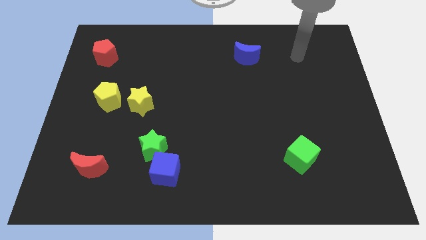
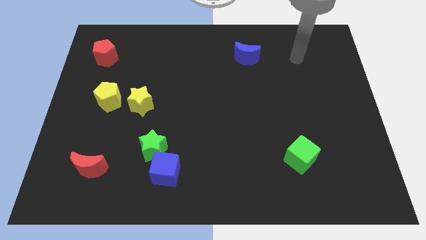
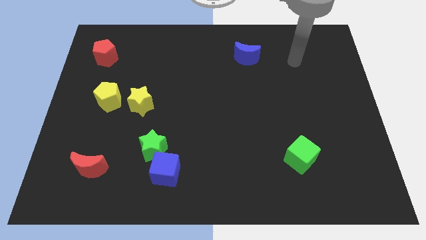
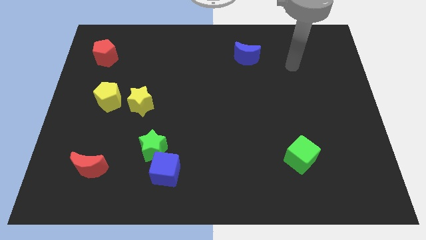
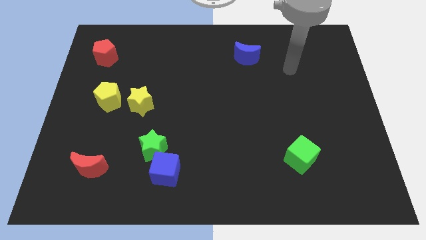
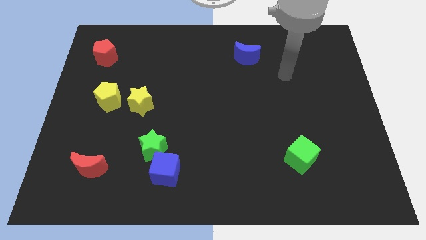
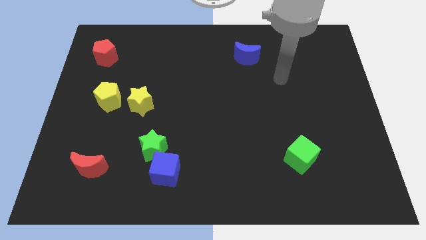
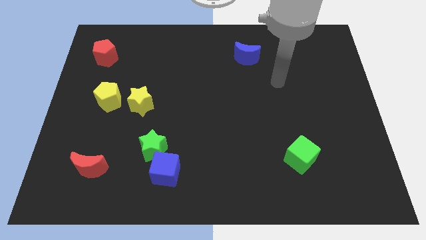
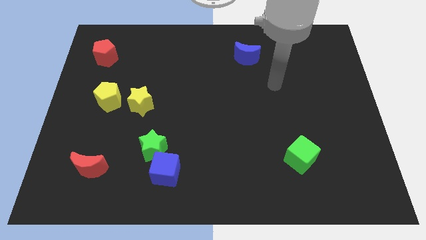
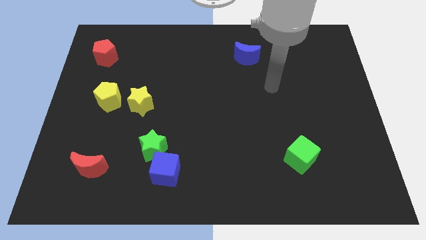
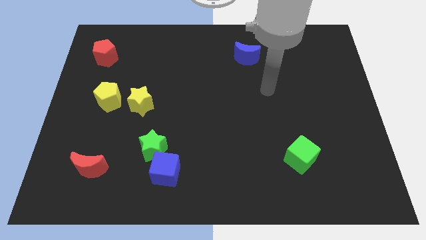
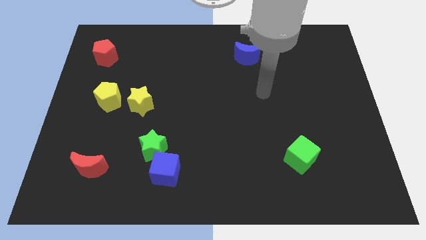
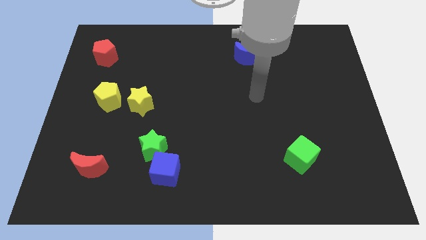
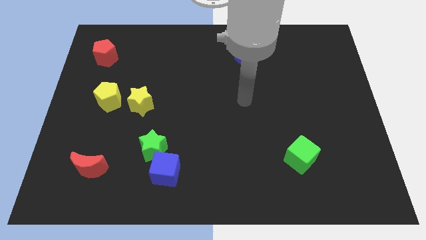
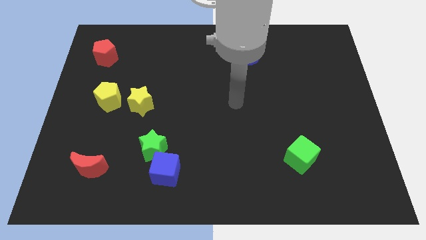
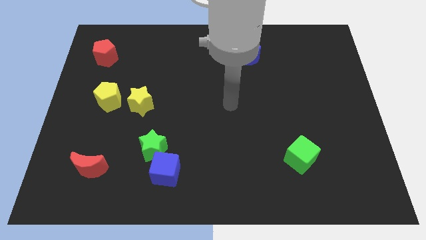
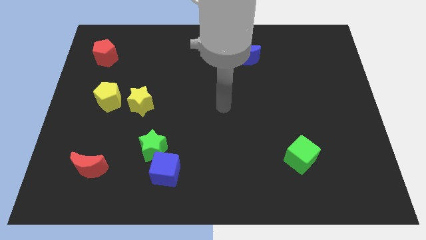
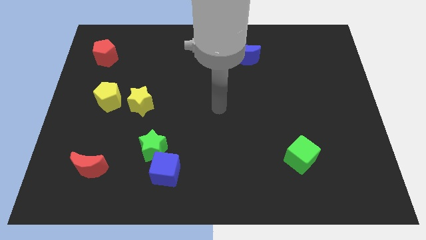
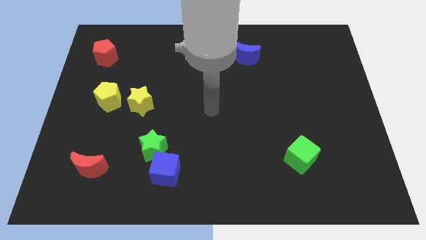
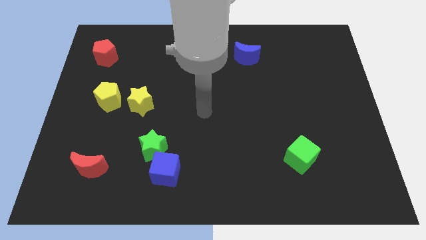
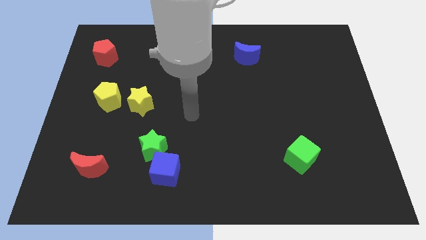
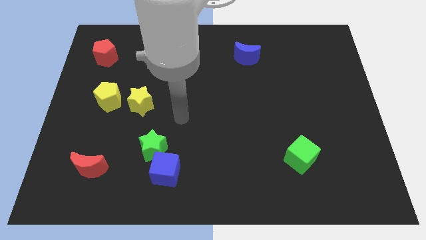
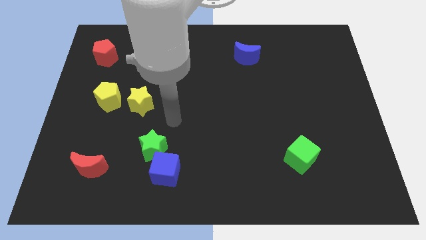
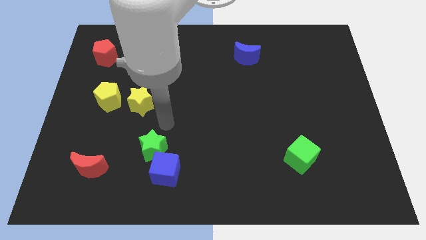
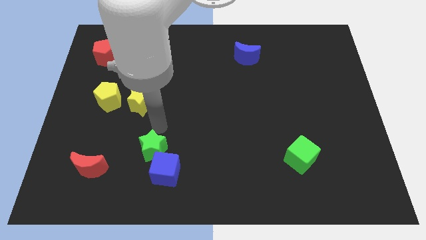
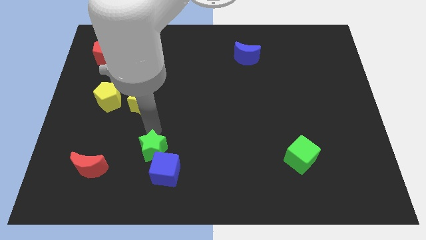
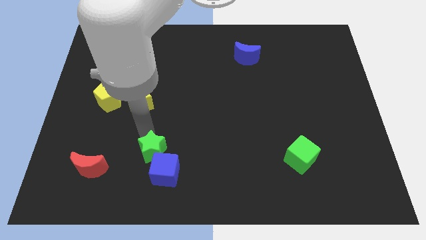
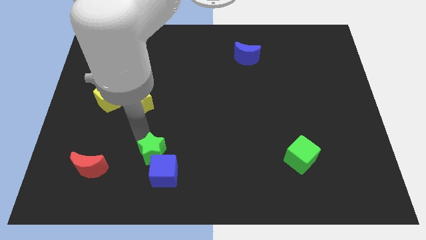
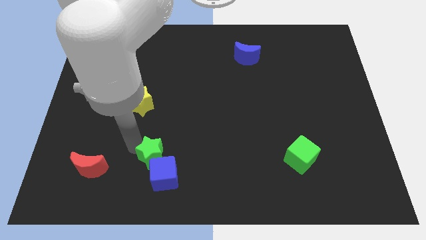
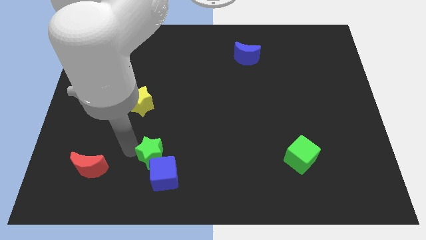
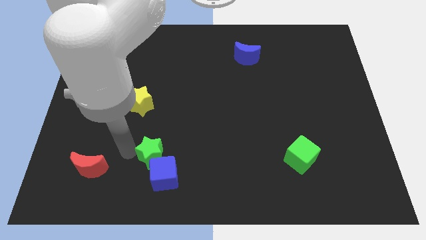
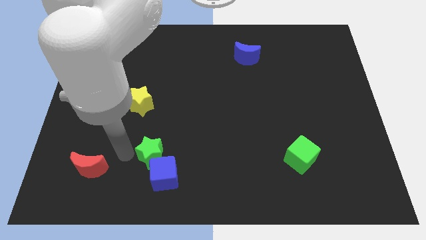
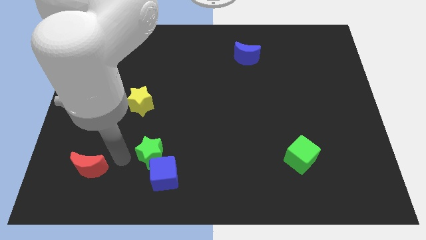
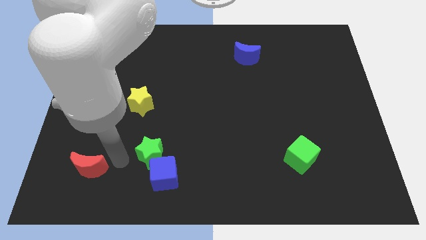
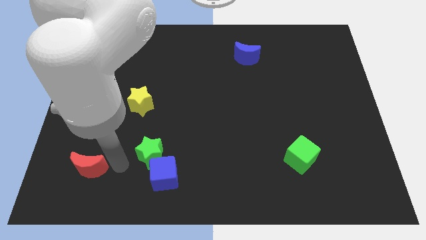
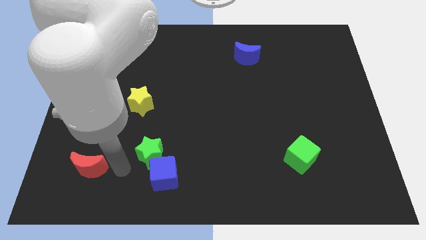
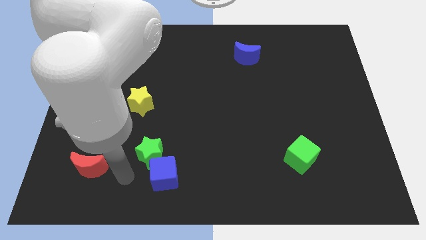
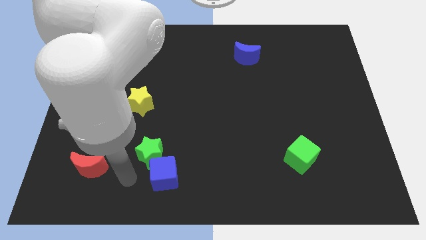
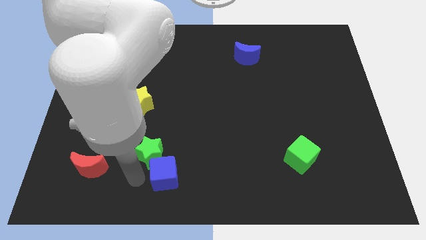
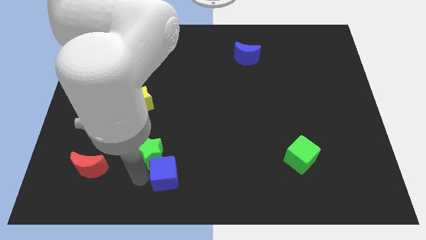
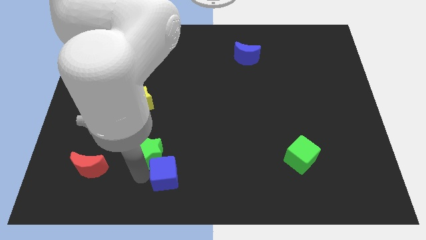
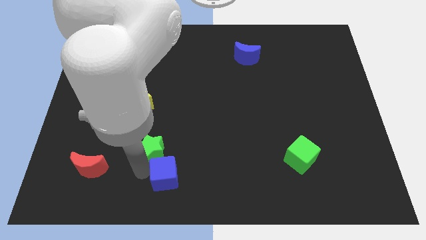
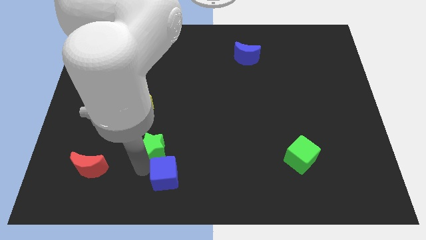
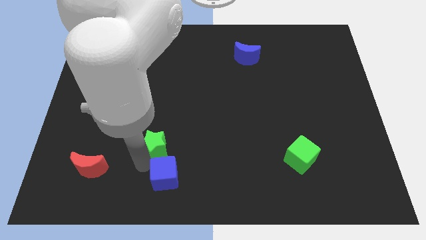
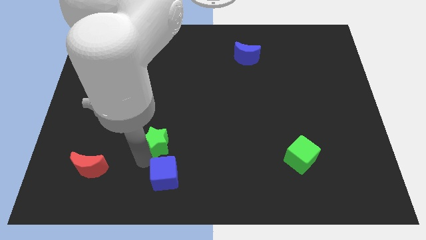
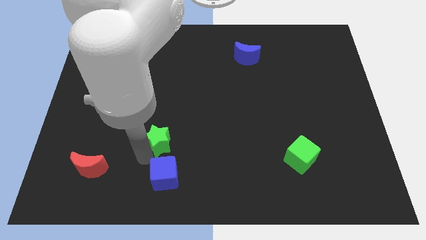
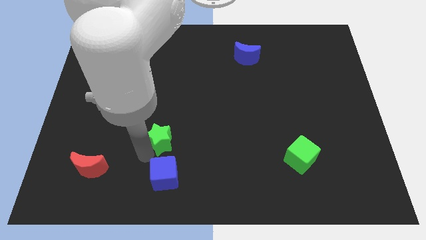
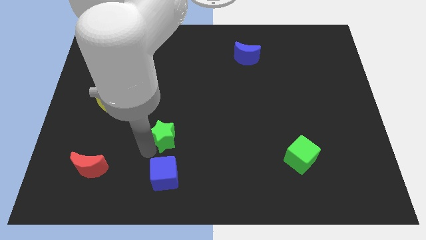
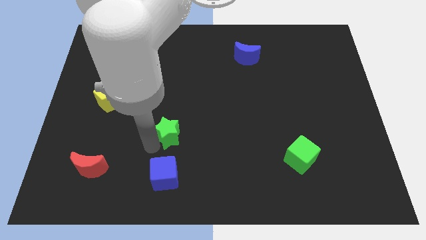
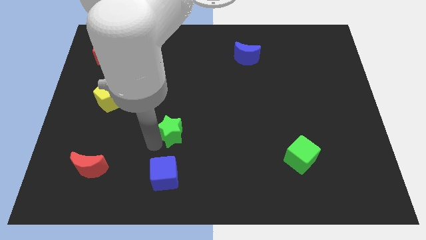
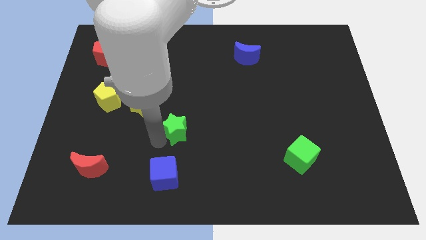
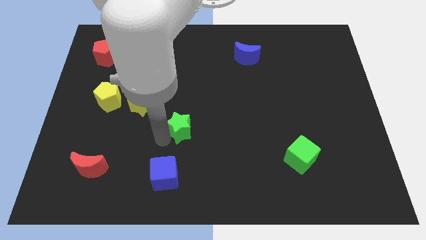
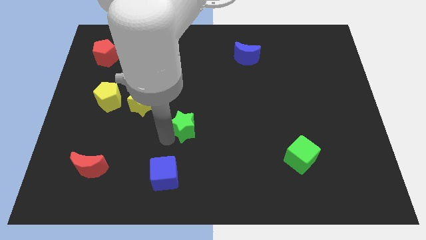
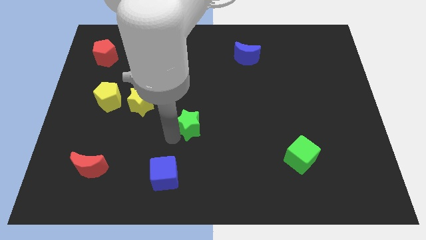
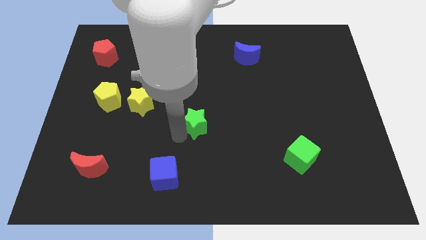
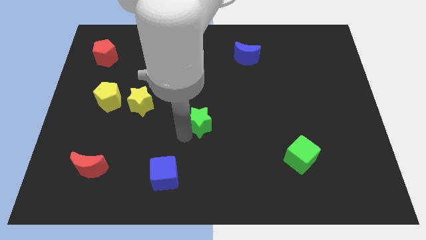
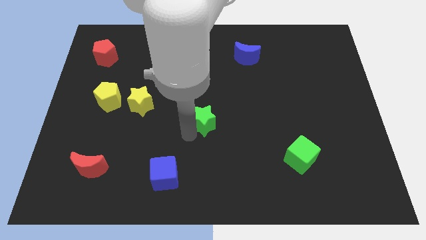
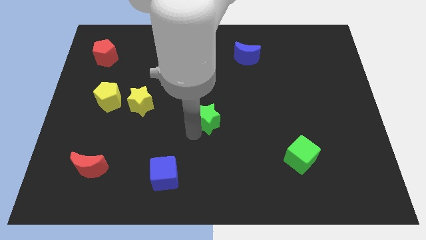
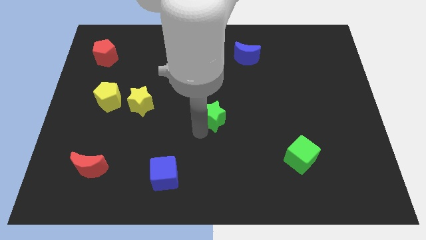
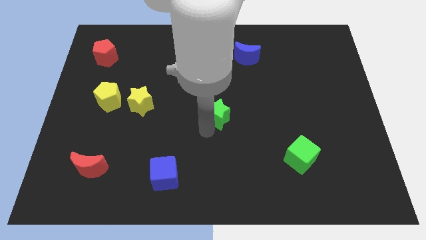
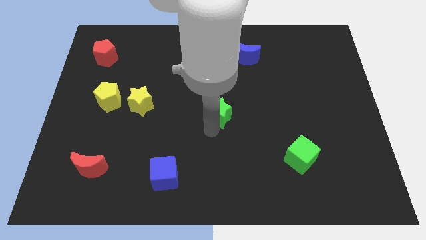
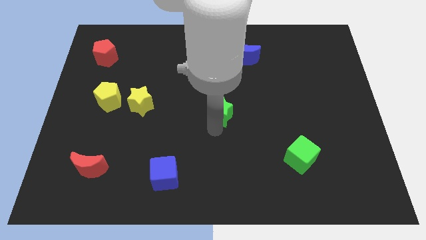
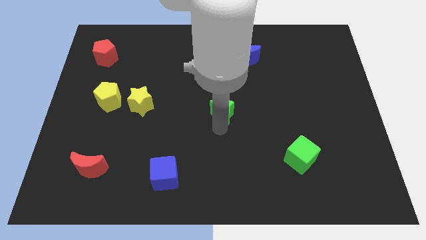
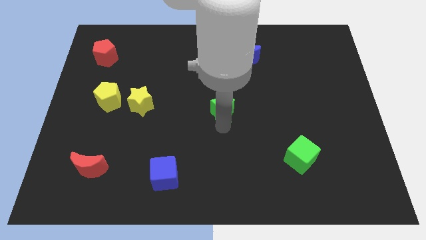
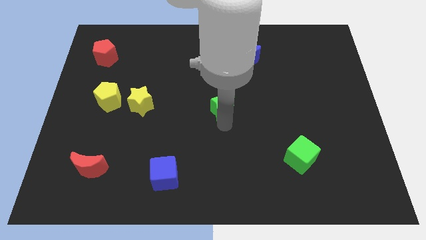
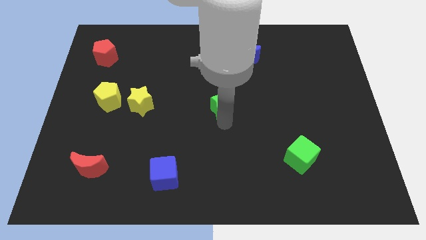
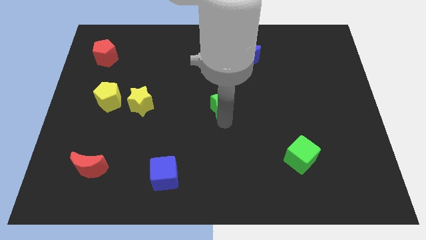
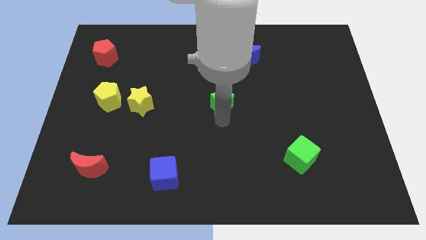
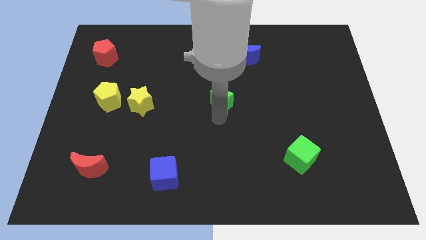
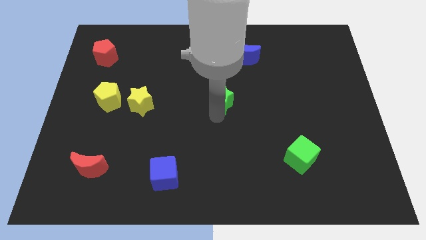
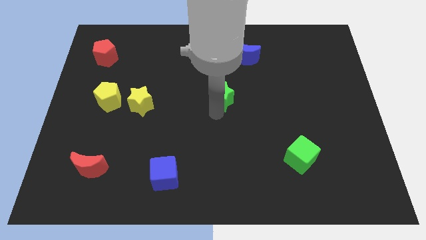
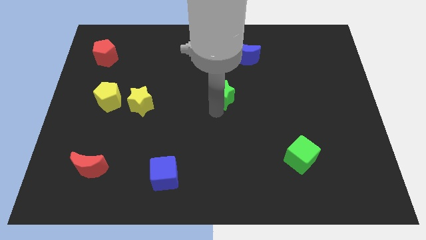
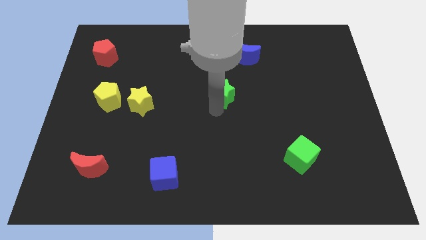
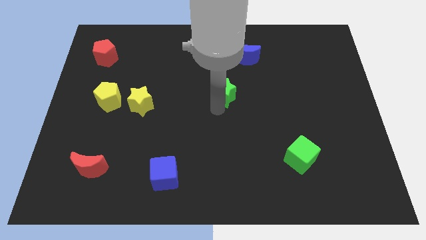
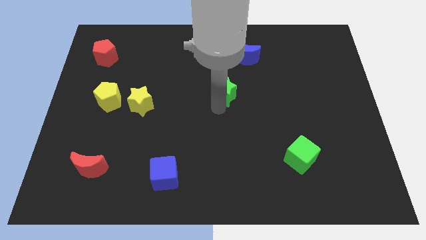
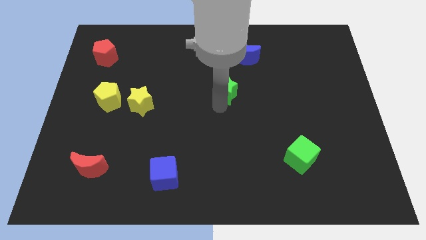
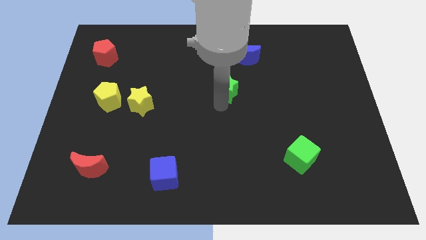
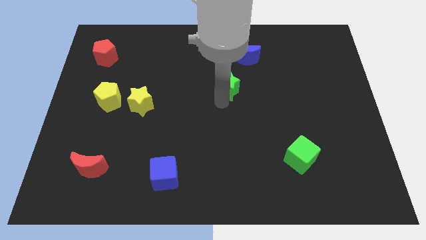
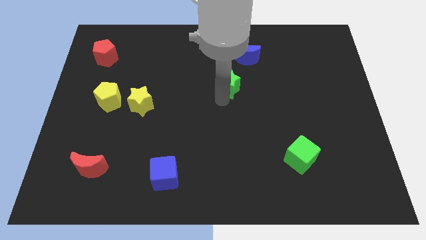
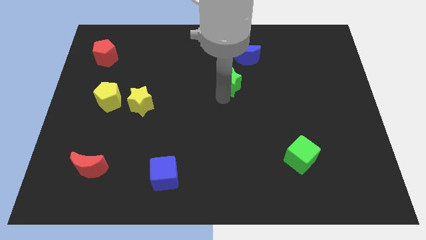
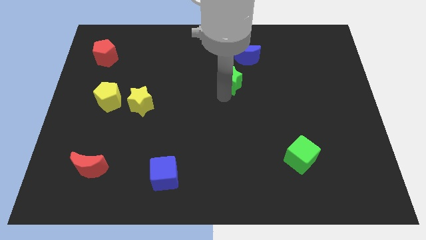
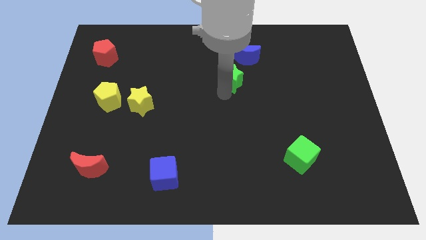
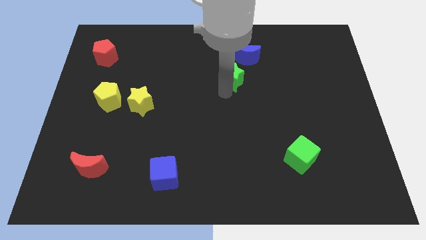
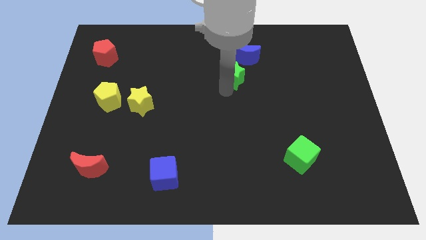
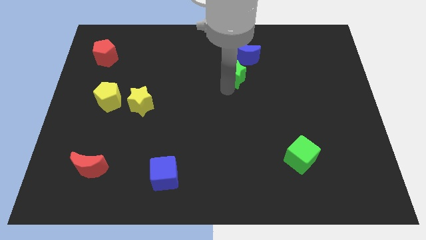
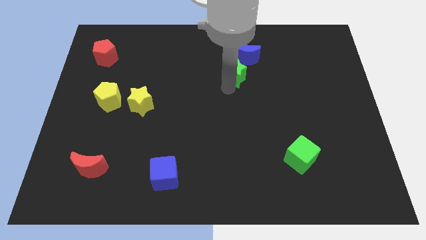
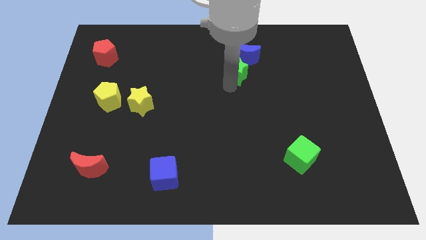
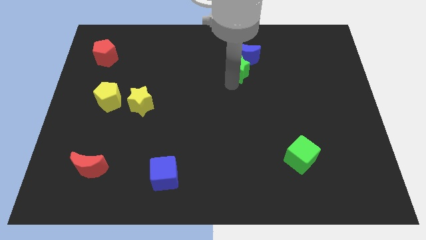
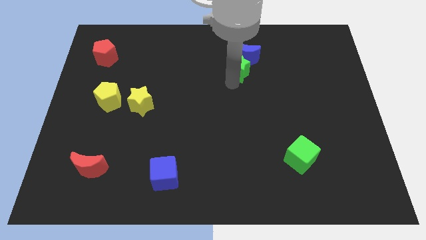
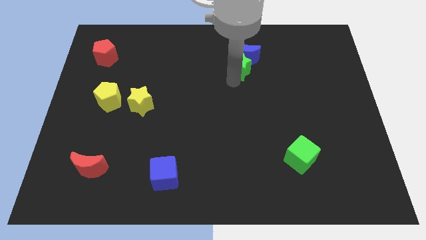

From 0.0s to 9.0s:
put the green star towards the blue moon
